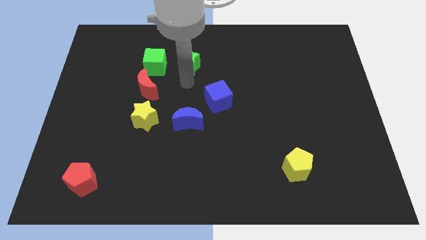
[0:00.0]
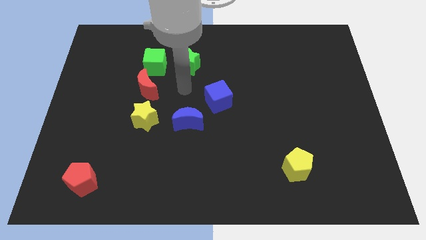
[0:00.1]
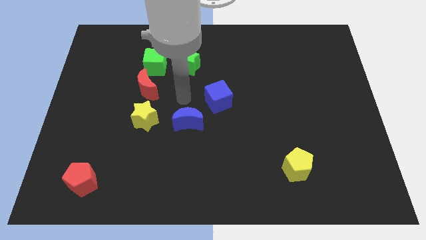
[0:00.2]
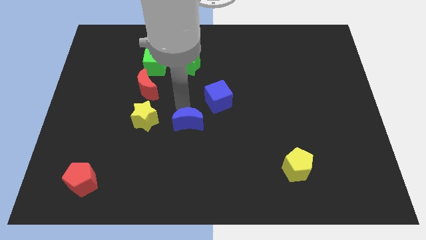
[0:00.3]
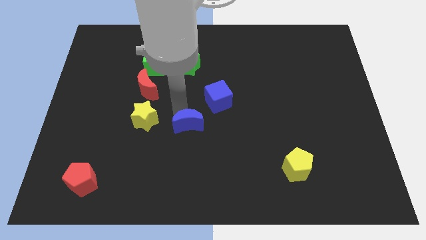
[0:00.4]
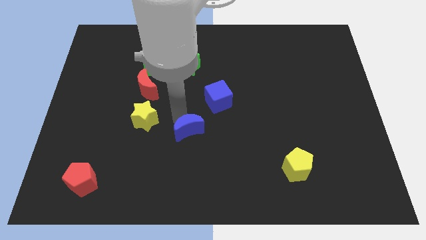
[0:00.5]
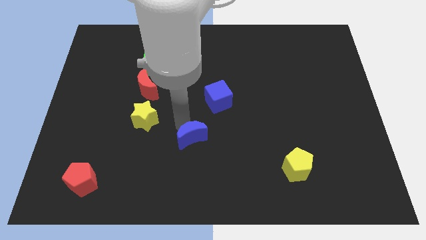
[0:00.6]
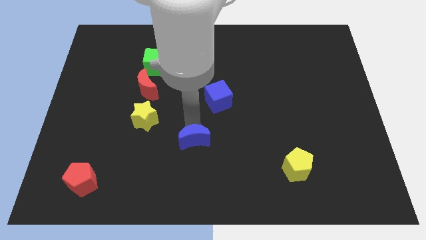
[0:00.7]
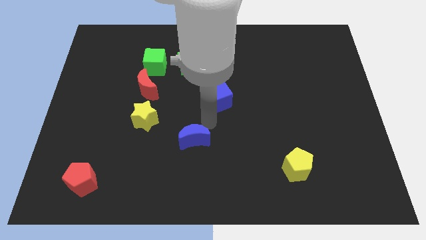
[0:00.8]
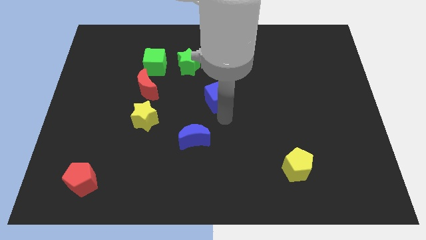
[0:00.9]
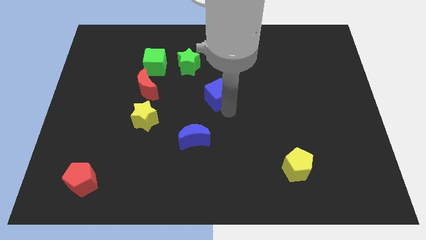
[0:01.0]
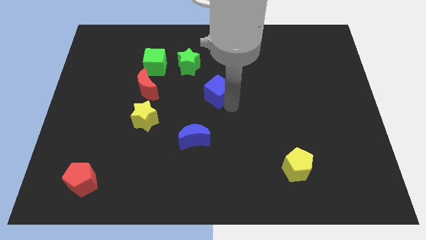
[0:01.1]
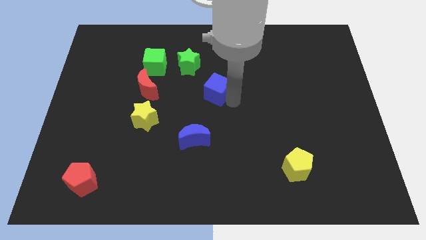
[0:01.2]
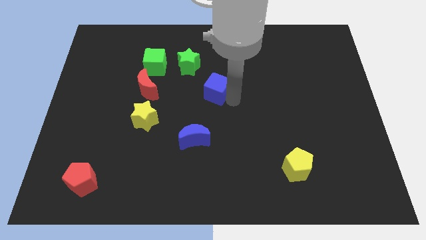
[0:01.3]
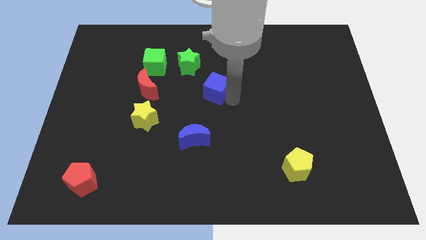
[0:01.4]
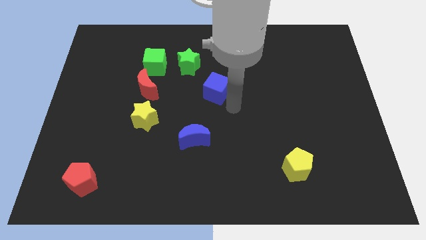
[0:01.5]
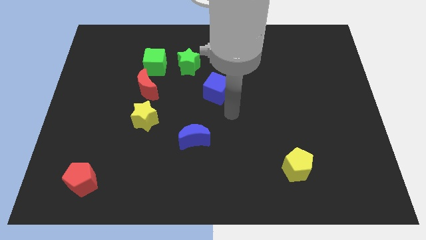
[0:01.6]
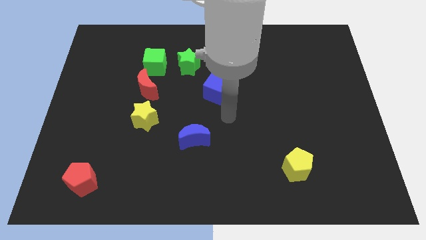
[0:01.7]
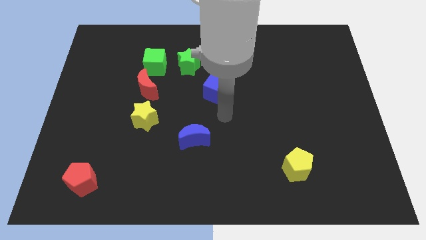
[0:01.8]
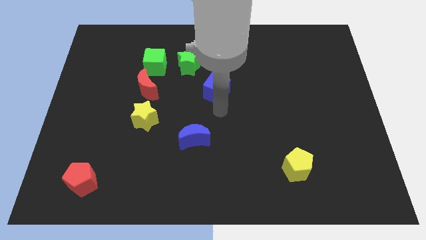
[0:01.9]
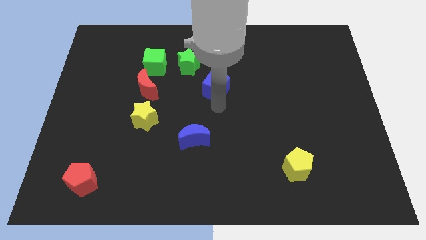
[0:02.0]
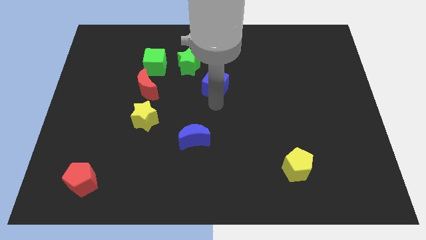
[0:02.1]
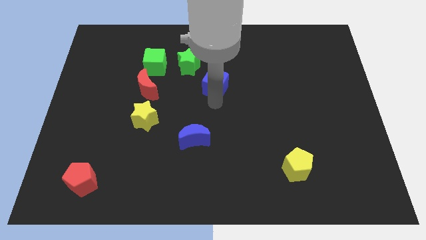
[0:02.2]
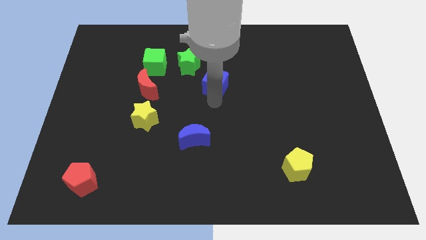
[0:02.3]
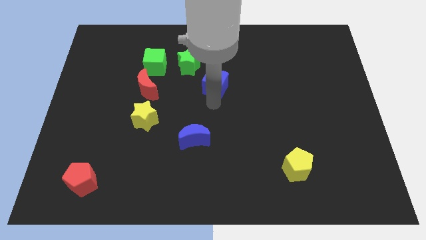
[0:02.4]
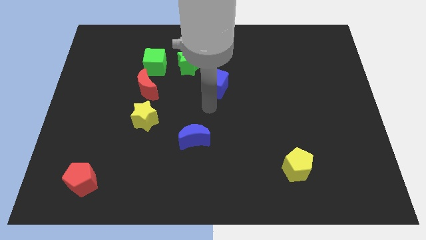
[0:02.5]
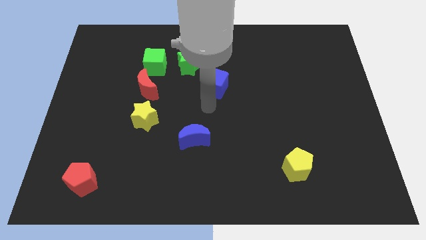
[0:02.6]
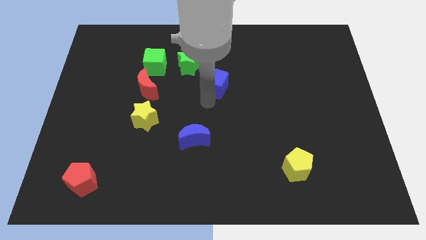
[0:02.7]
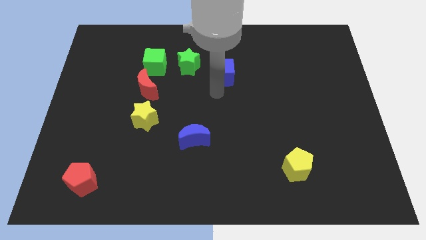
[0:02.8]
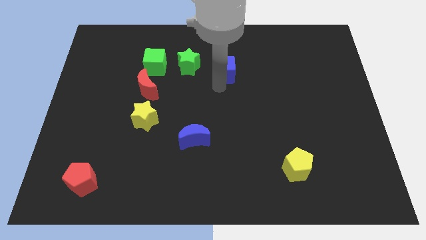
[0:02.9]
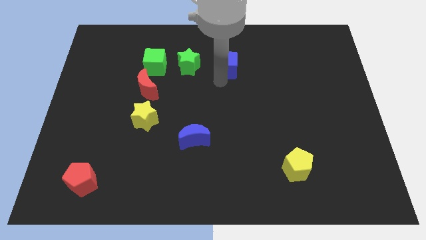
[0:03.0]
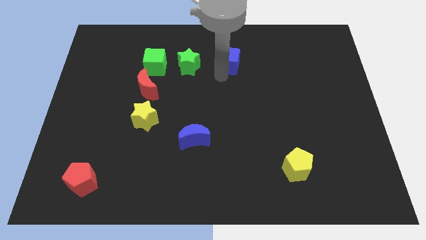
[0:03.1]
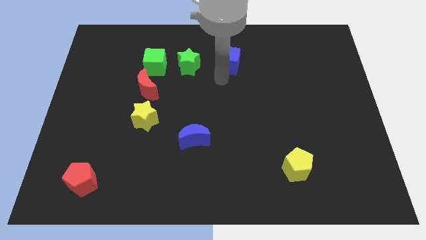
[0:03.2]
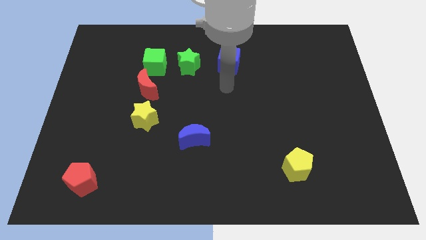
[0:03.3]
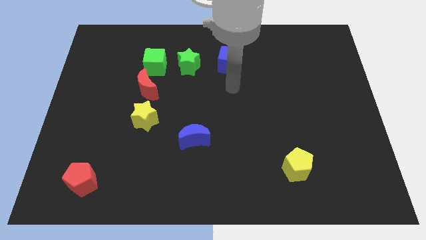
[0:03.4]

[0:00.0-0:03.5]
separate blue cube and blue moon

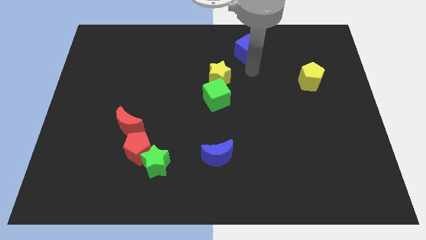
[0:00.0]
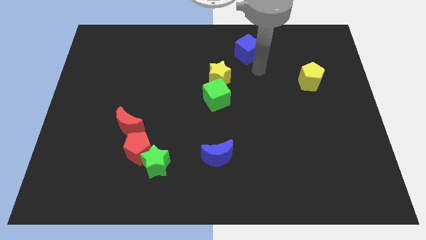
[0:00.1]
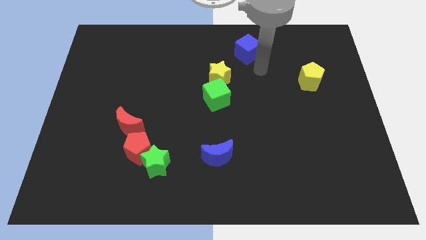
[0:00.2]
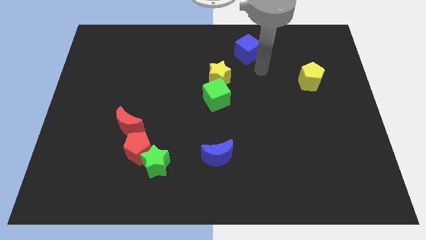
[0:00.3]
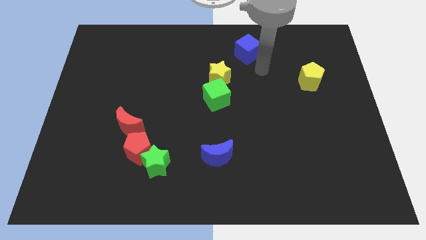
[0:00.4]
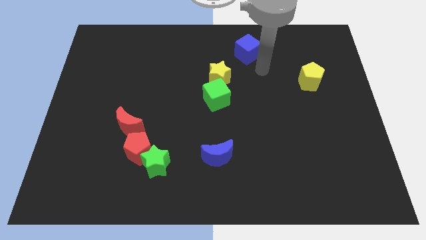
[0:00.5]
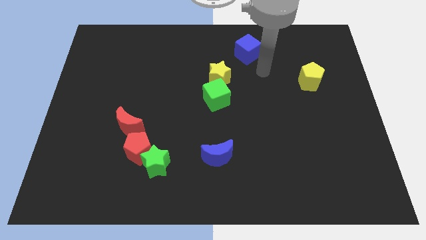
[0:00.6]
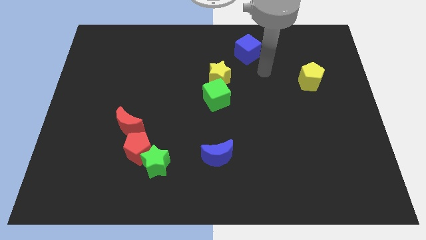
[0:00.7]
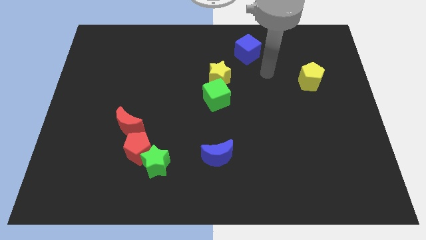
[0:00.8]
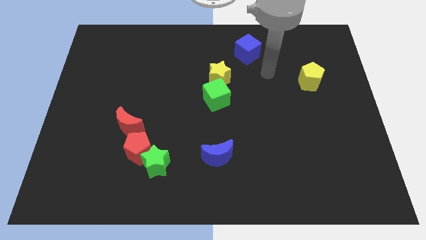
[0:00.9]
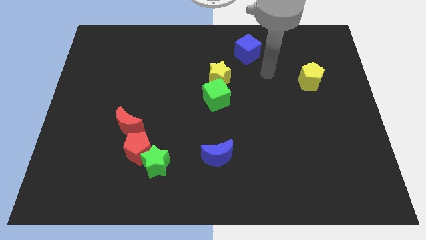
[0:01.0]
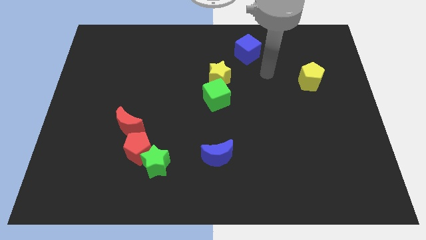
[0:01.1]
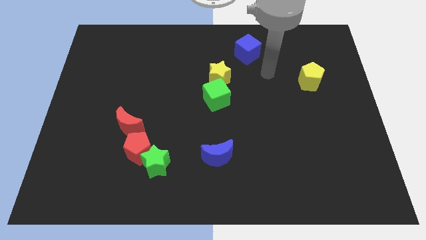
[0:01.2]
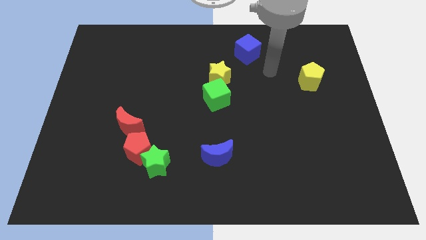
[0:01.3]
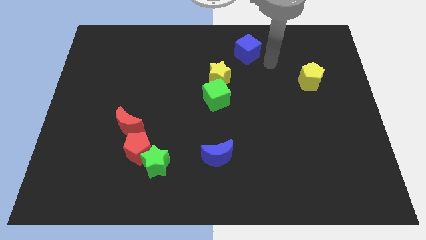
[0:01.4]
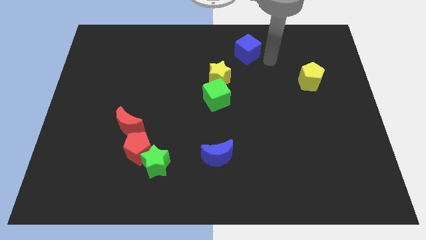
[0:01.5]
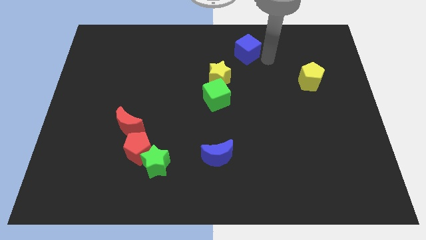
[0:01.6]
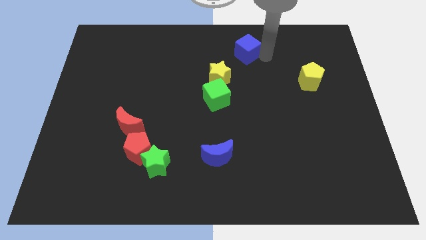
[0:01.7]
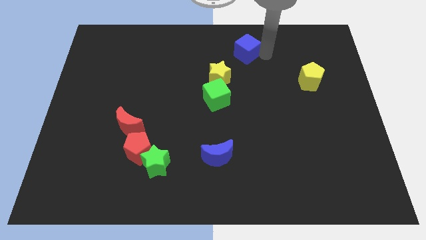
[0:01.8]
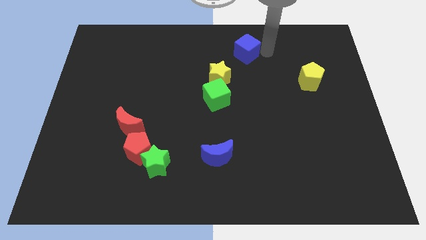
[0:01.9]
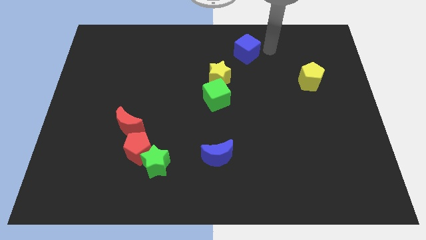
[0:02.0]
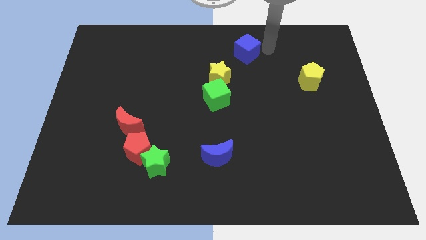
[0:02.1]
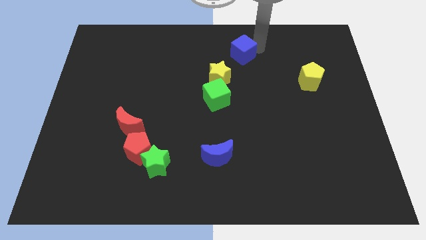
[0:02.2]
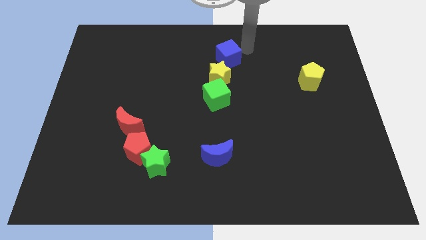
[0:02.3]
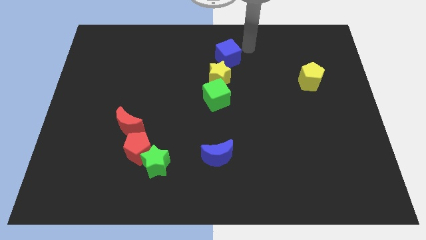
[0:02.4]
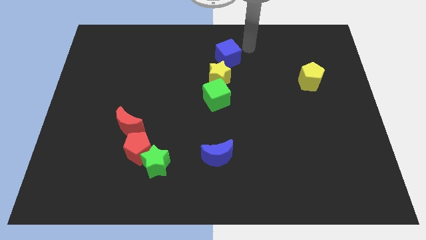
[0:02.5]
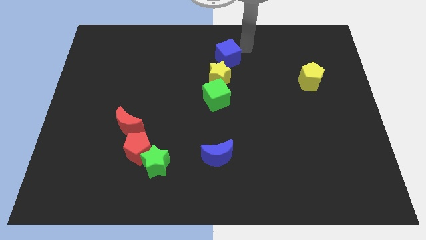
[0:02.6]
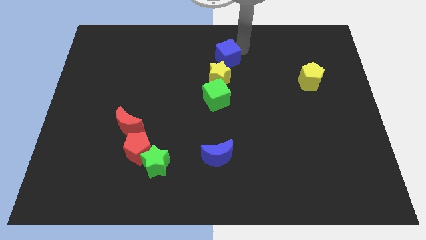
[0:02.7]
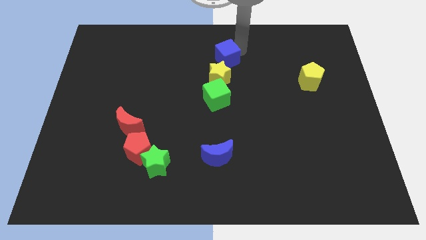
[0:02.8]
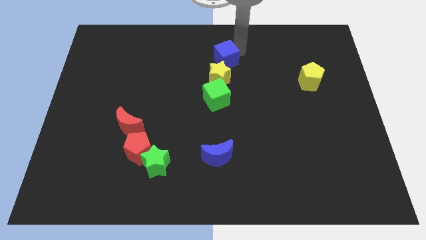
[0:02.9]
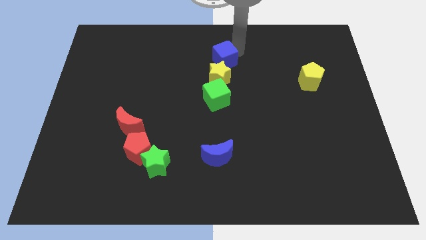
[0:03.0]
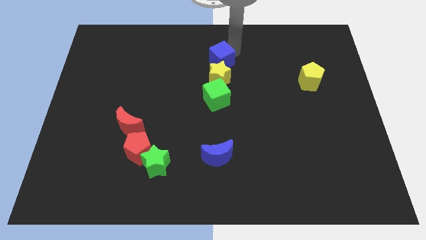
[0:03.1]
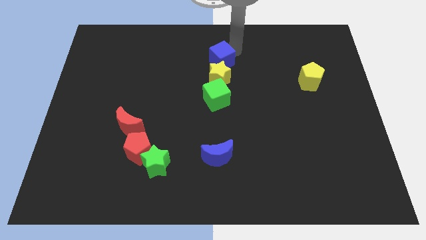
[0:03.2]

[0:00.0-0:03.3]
move the blue cube above the yellow star at the top side center

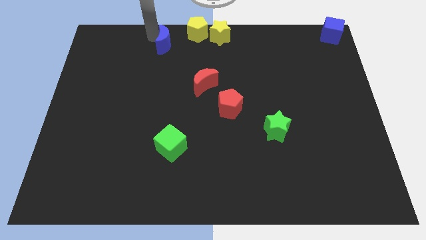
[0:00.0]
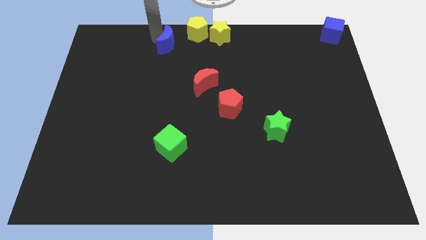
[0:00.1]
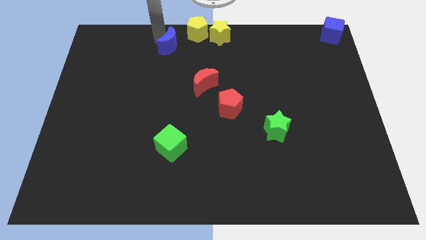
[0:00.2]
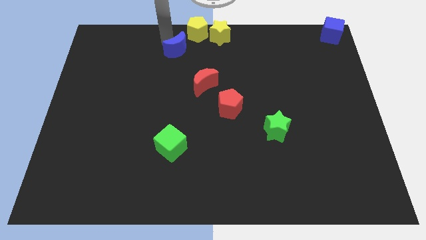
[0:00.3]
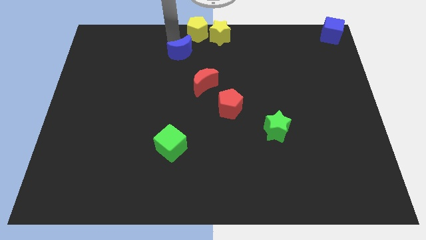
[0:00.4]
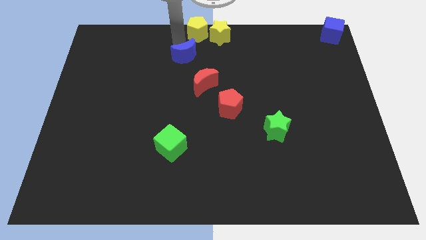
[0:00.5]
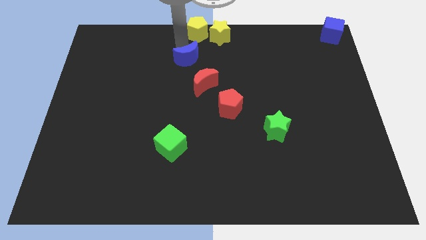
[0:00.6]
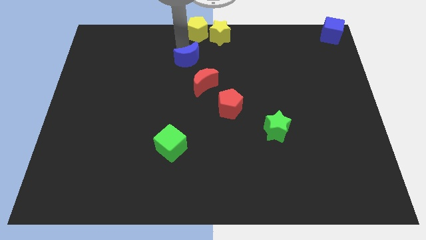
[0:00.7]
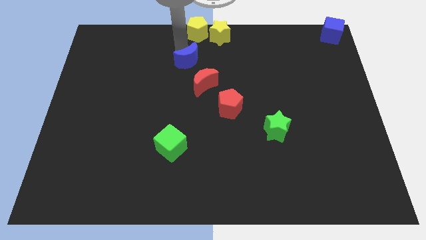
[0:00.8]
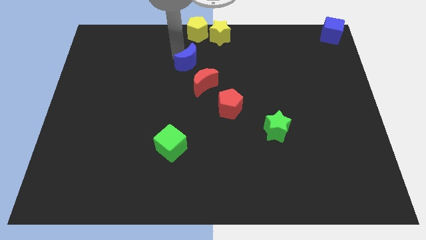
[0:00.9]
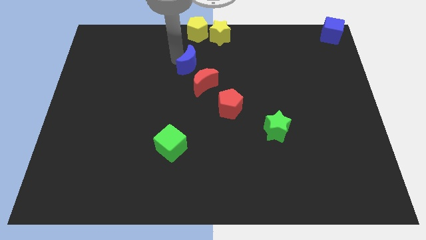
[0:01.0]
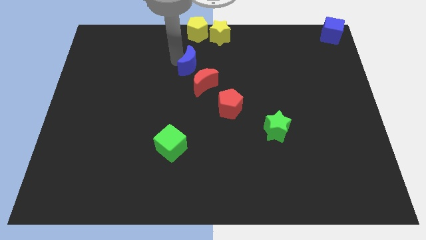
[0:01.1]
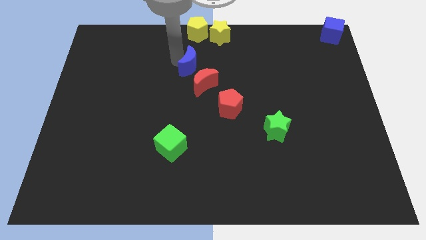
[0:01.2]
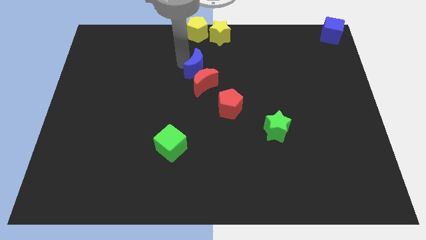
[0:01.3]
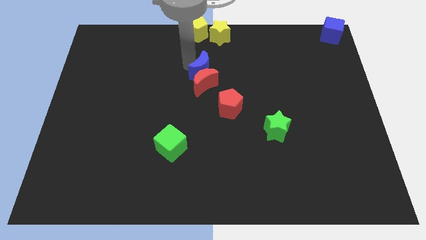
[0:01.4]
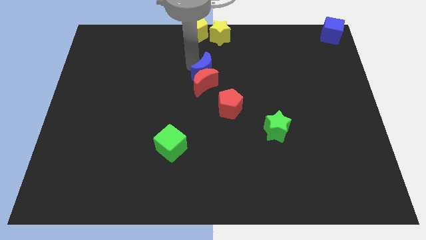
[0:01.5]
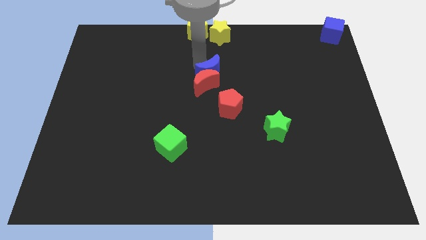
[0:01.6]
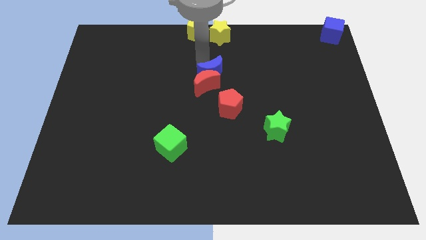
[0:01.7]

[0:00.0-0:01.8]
push the blue moon into the red moon

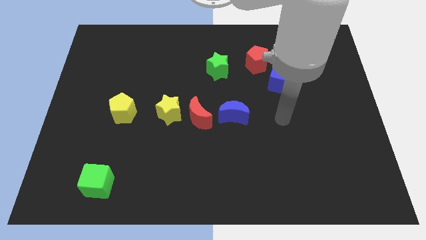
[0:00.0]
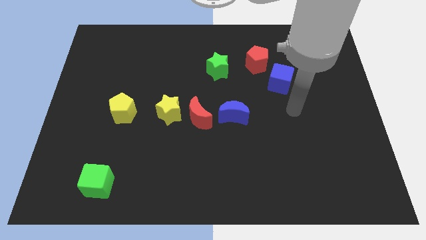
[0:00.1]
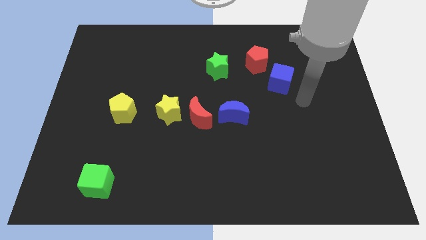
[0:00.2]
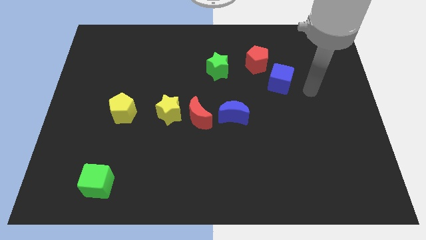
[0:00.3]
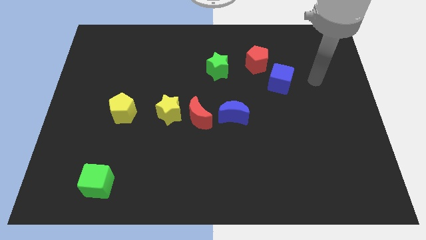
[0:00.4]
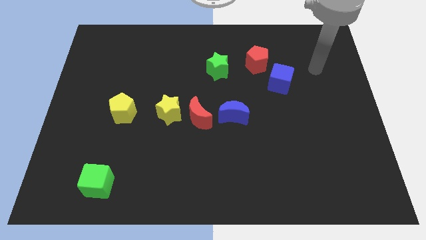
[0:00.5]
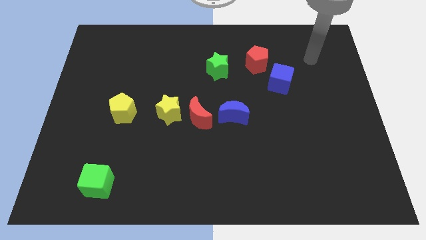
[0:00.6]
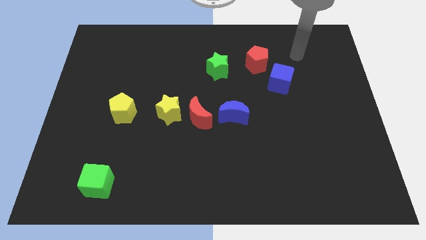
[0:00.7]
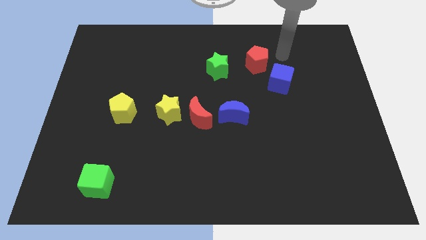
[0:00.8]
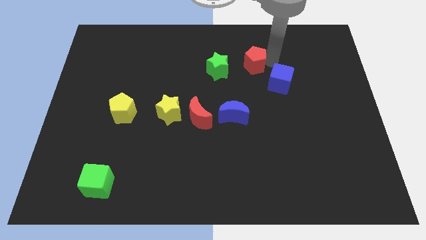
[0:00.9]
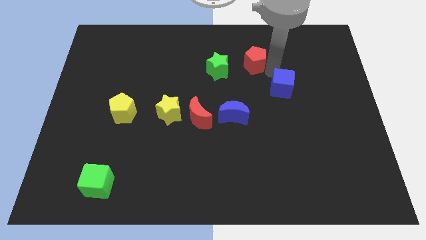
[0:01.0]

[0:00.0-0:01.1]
place arm in between red pentagon and blue cube
